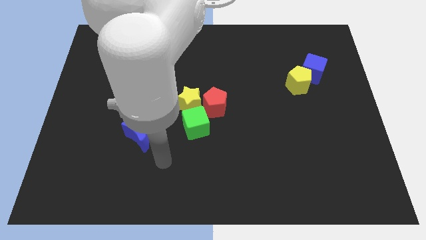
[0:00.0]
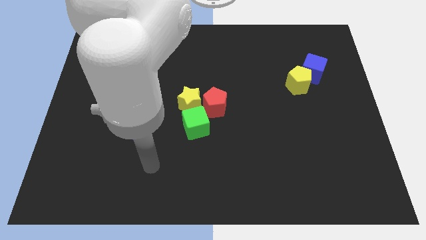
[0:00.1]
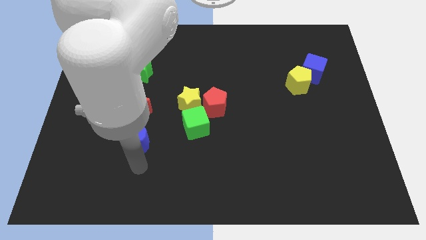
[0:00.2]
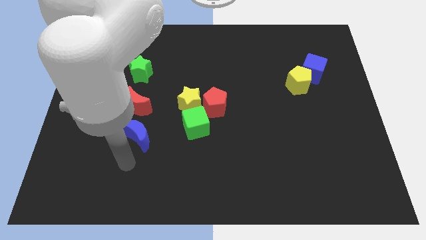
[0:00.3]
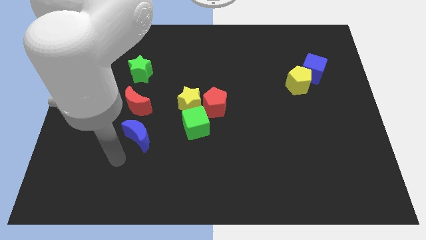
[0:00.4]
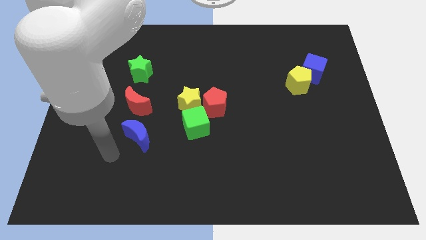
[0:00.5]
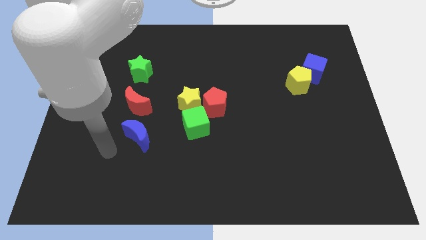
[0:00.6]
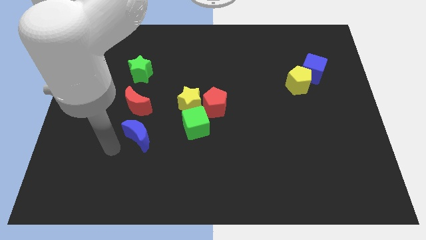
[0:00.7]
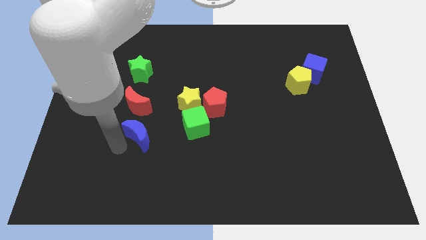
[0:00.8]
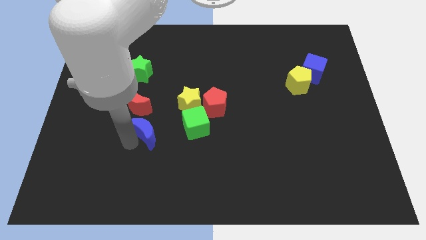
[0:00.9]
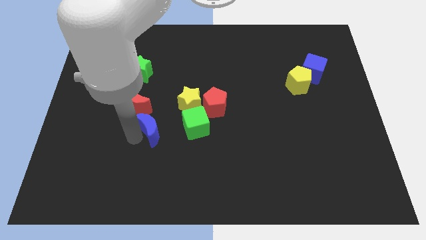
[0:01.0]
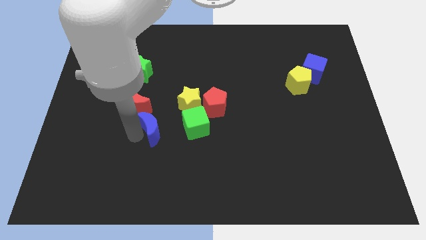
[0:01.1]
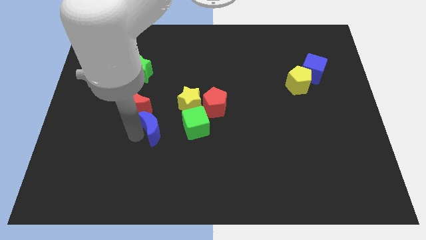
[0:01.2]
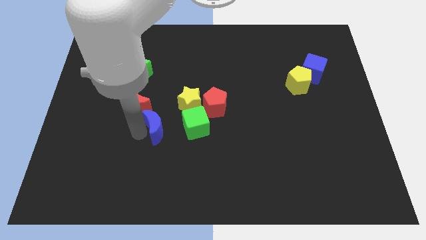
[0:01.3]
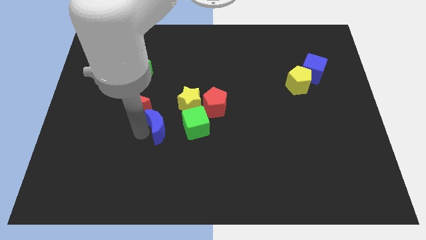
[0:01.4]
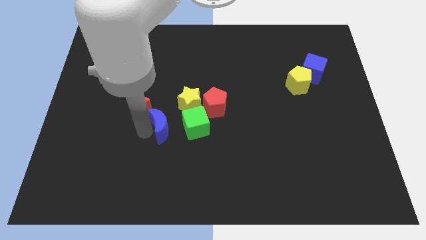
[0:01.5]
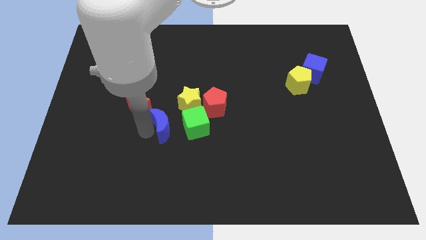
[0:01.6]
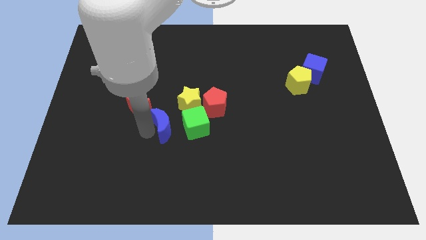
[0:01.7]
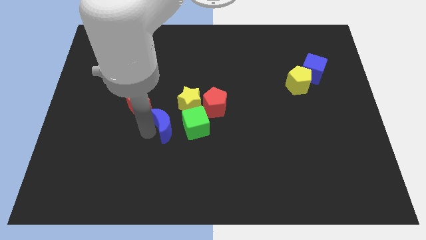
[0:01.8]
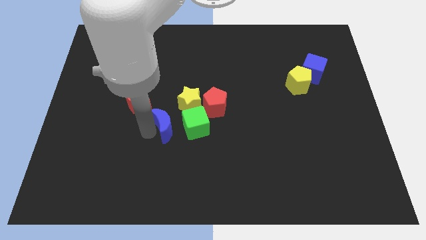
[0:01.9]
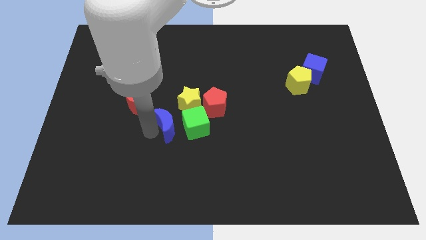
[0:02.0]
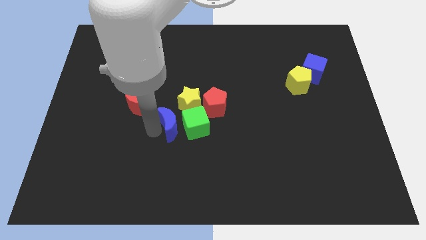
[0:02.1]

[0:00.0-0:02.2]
push the blue moon to the left of green cube

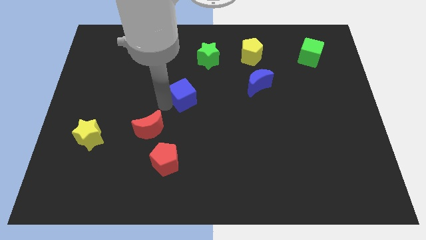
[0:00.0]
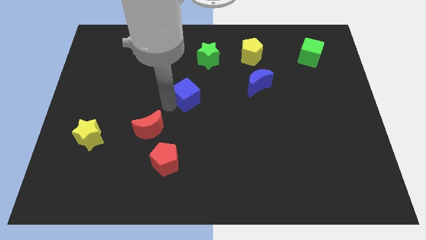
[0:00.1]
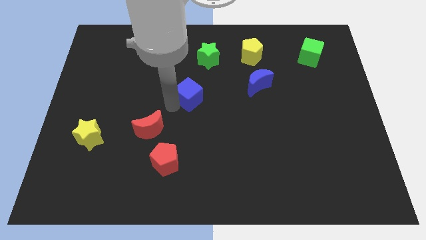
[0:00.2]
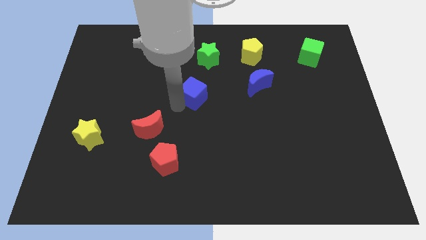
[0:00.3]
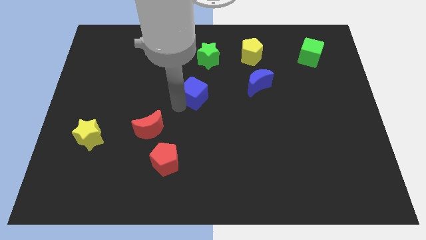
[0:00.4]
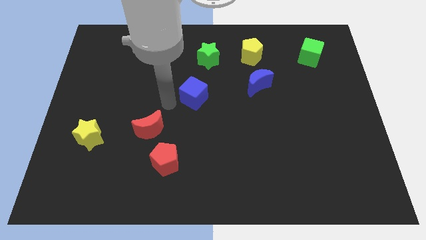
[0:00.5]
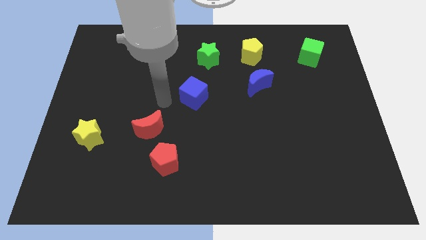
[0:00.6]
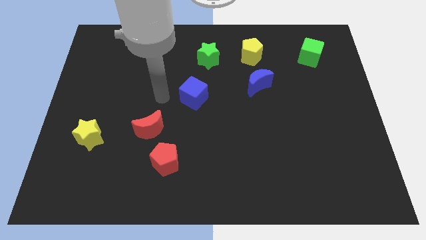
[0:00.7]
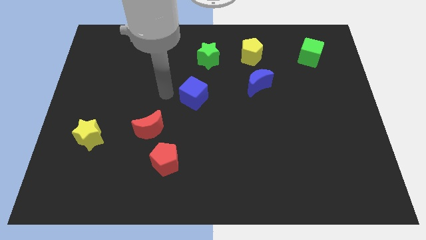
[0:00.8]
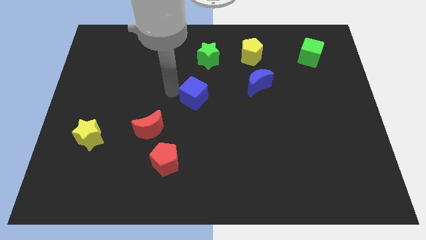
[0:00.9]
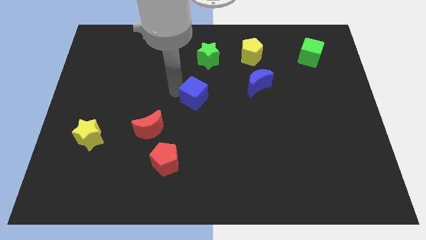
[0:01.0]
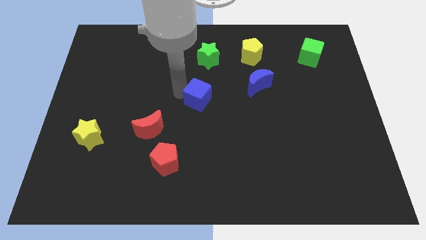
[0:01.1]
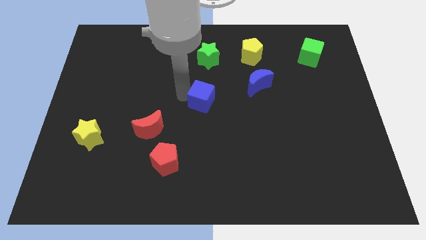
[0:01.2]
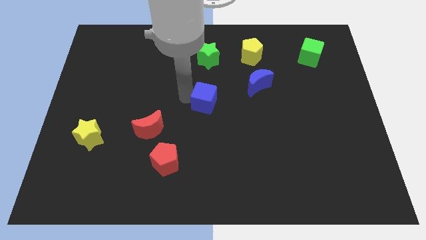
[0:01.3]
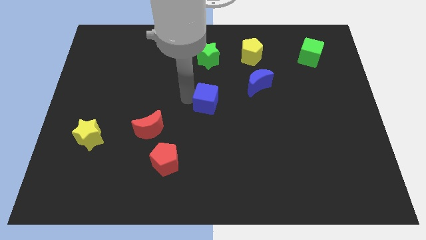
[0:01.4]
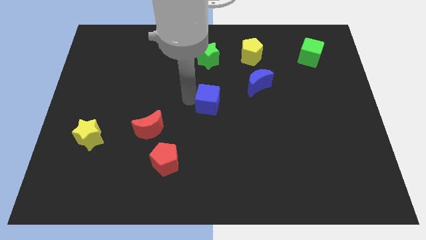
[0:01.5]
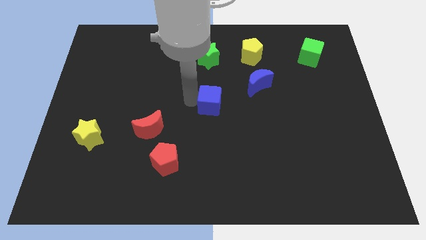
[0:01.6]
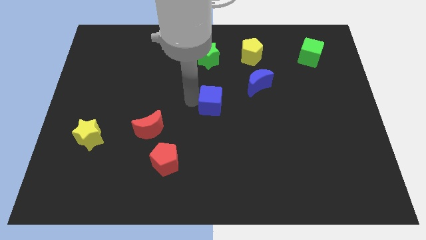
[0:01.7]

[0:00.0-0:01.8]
put the blue cube vertically below the green star

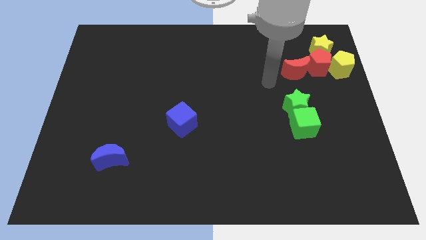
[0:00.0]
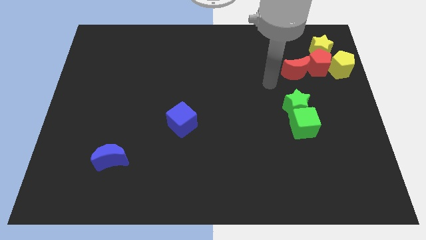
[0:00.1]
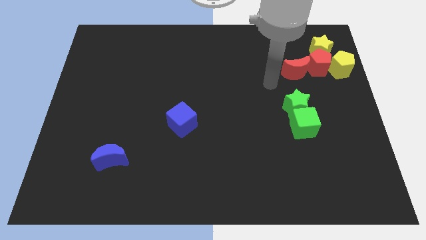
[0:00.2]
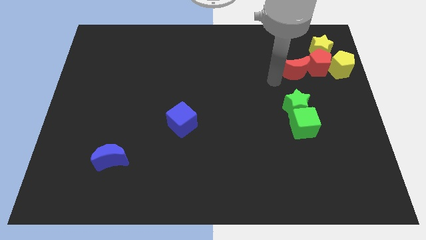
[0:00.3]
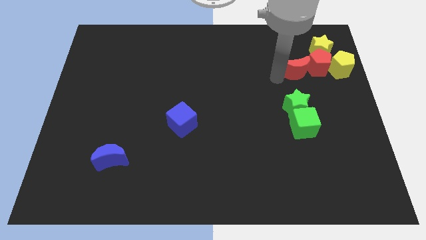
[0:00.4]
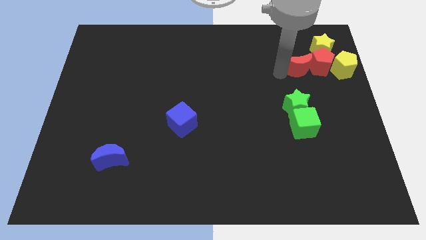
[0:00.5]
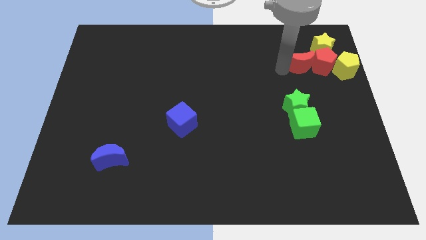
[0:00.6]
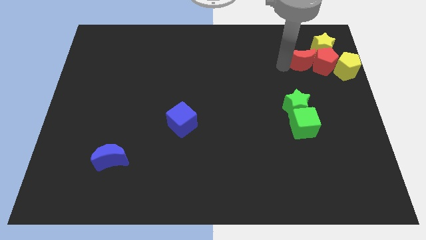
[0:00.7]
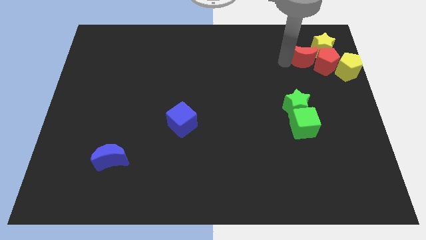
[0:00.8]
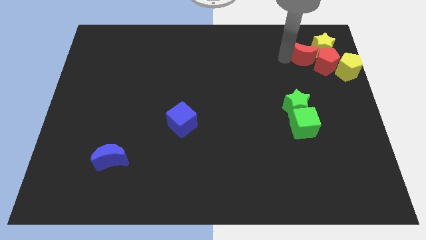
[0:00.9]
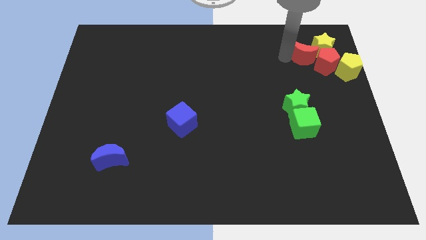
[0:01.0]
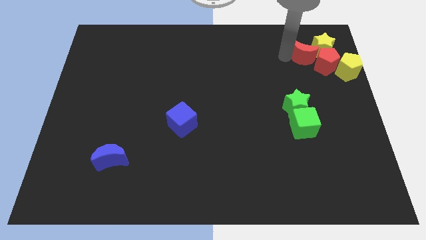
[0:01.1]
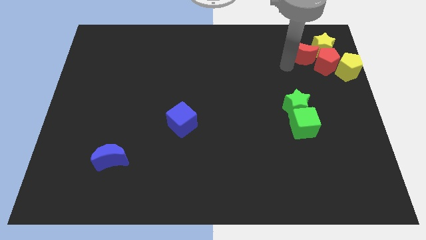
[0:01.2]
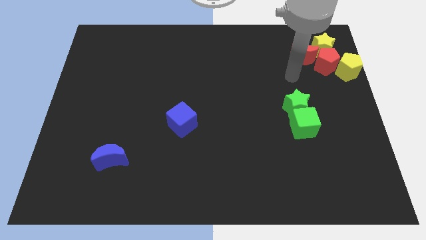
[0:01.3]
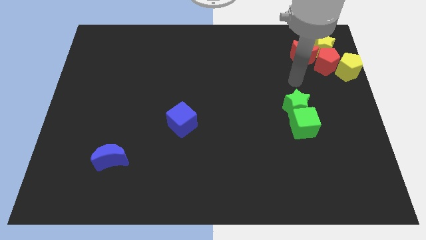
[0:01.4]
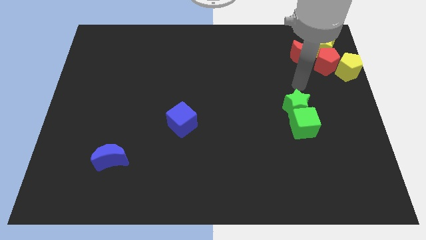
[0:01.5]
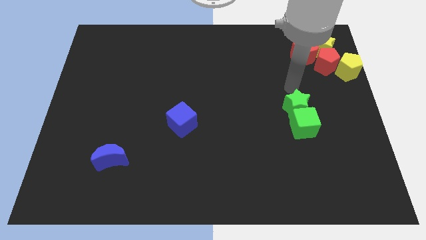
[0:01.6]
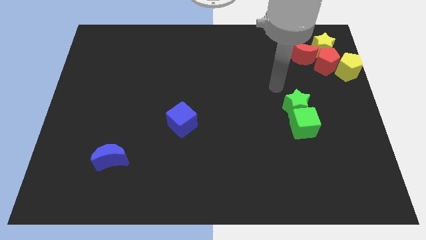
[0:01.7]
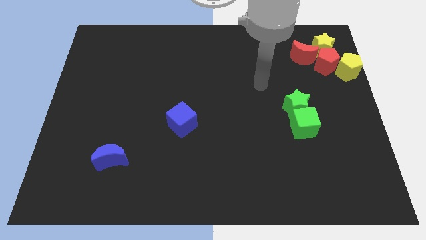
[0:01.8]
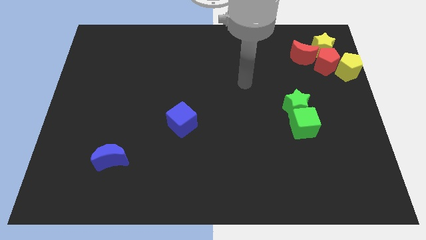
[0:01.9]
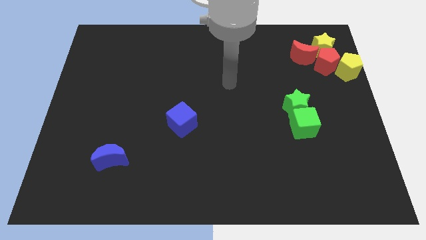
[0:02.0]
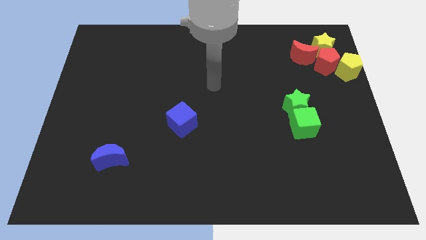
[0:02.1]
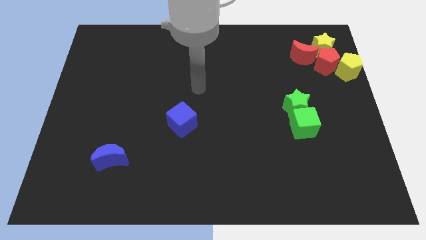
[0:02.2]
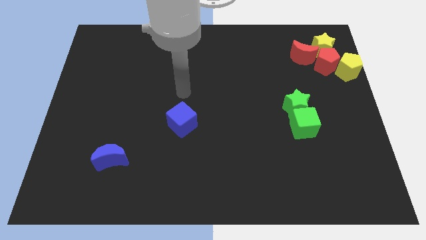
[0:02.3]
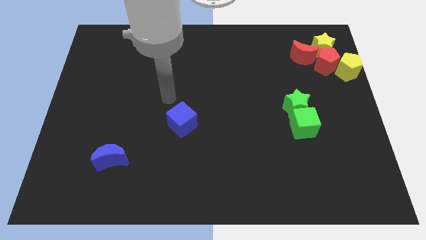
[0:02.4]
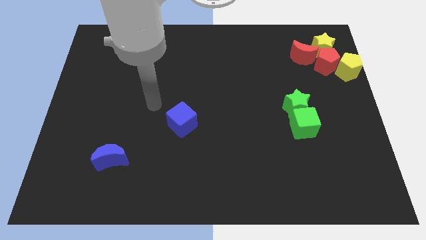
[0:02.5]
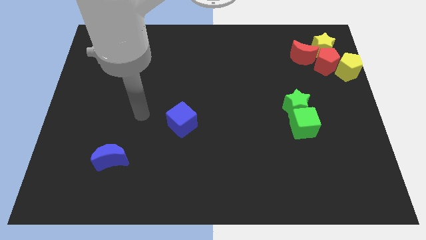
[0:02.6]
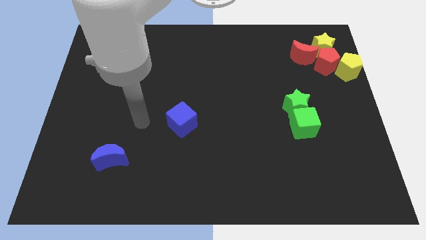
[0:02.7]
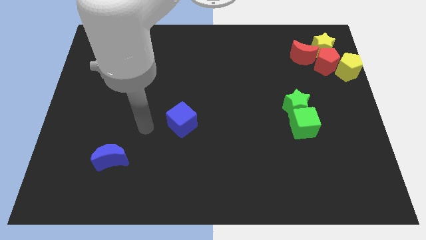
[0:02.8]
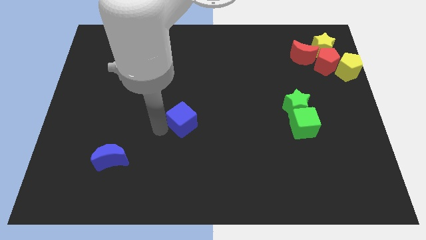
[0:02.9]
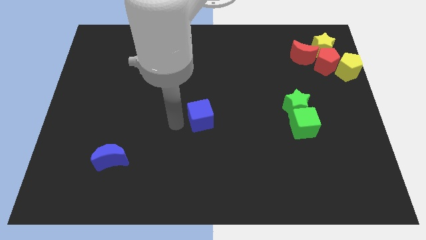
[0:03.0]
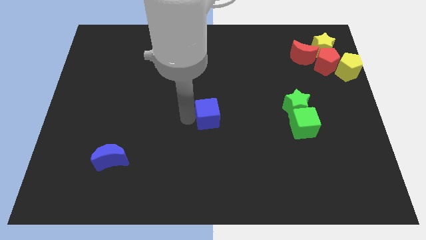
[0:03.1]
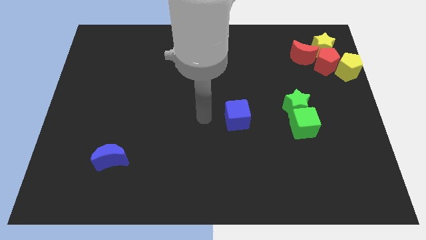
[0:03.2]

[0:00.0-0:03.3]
place the blue cube in the center of the board

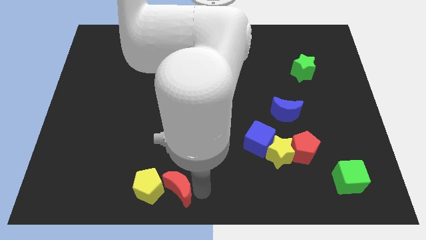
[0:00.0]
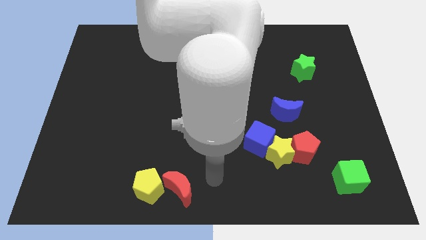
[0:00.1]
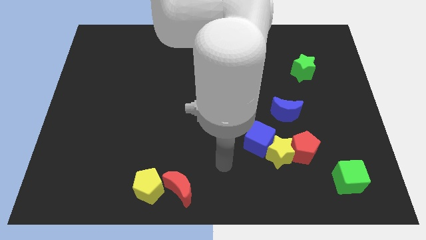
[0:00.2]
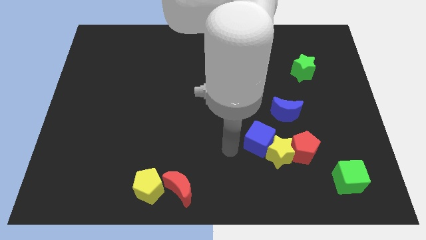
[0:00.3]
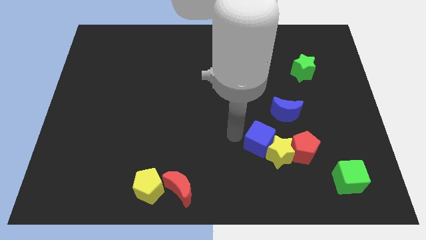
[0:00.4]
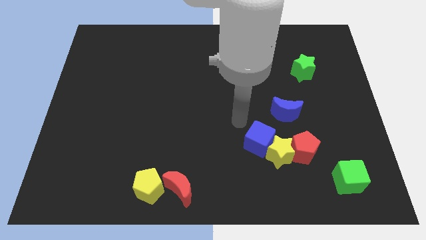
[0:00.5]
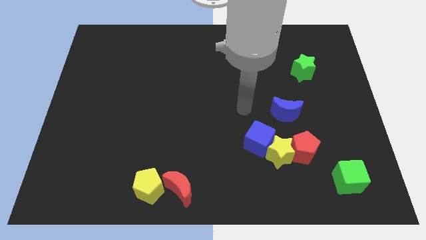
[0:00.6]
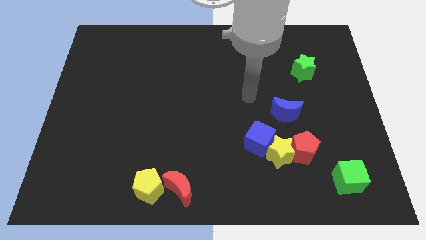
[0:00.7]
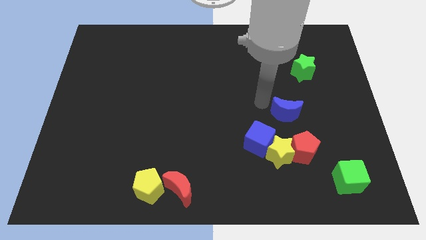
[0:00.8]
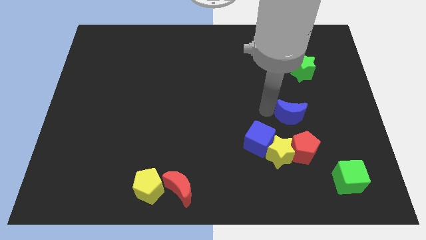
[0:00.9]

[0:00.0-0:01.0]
tap the blue crescent

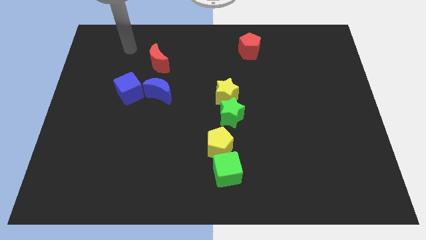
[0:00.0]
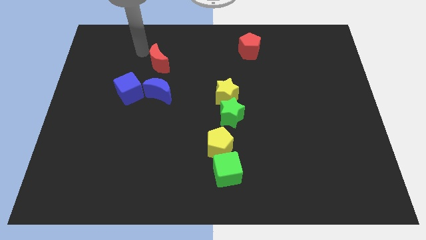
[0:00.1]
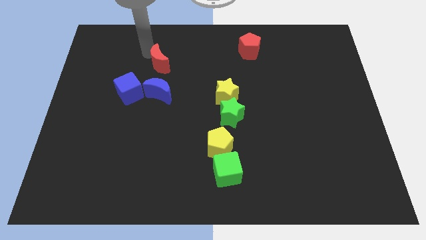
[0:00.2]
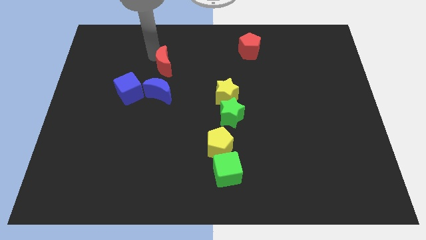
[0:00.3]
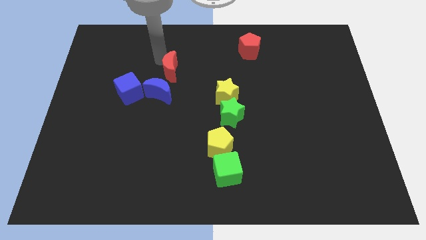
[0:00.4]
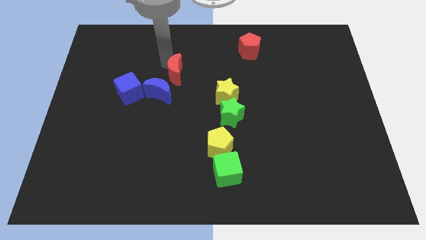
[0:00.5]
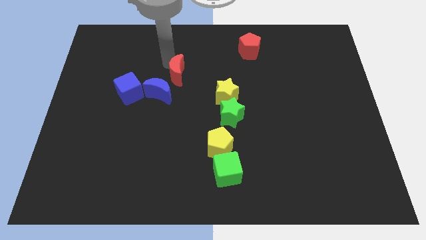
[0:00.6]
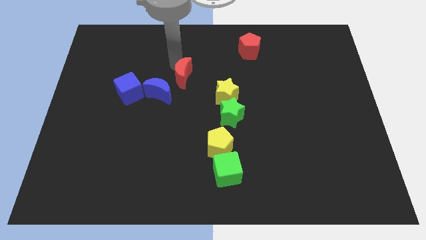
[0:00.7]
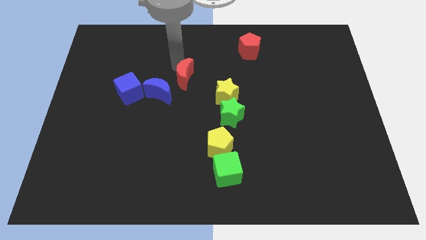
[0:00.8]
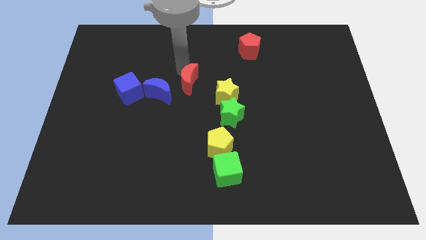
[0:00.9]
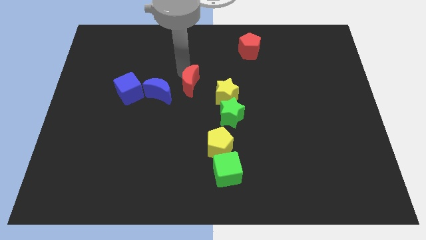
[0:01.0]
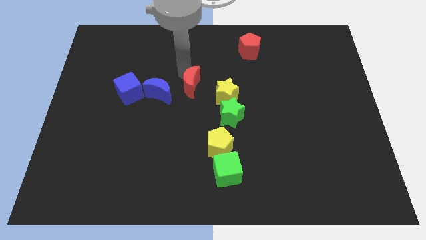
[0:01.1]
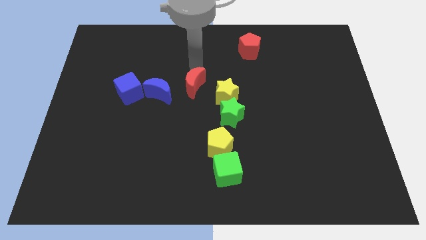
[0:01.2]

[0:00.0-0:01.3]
move the red moon diagonally top right to the blue moon
